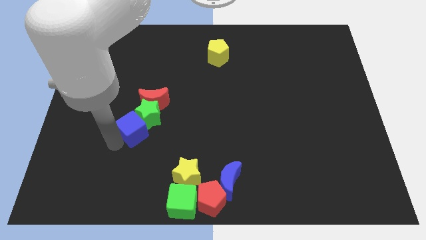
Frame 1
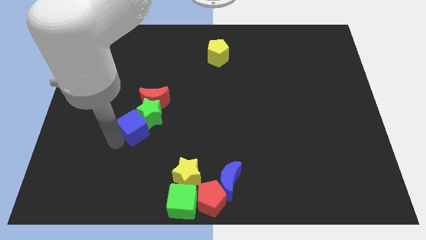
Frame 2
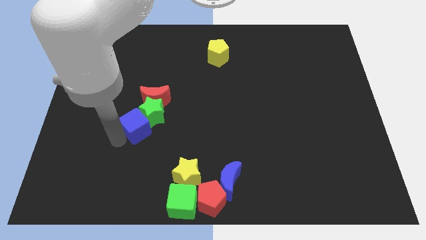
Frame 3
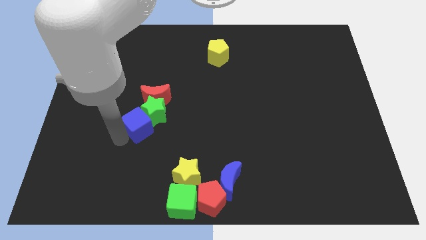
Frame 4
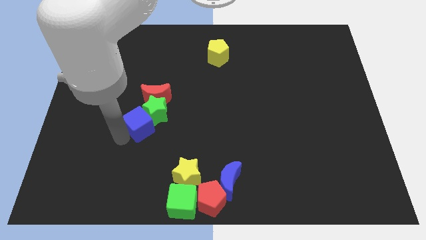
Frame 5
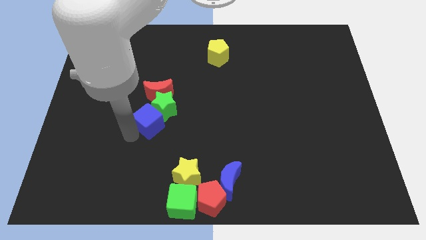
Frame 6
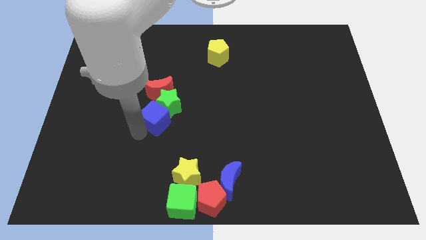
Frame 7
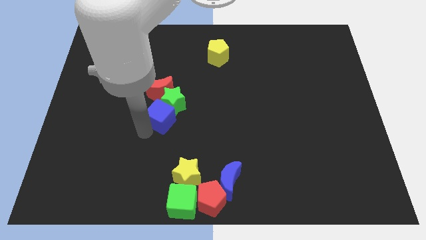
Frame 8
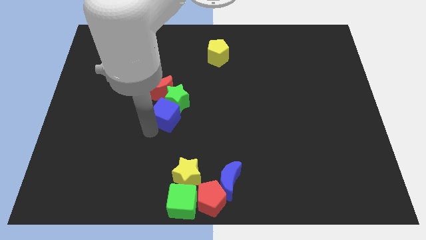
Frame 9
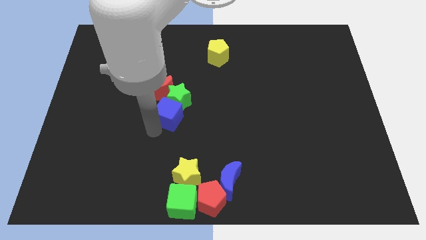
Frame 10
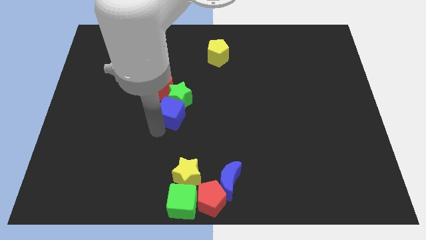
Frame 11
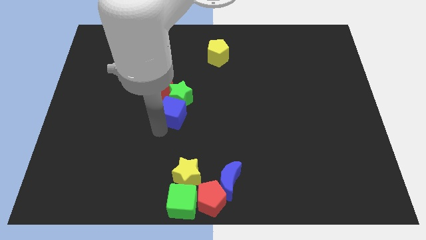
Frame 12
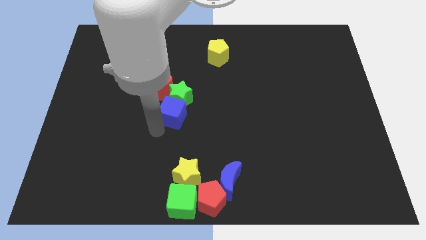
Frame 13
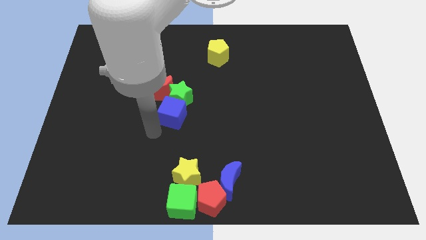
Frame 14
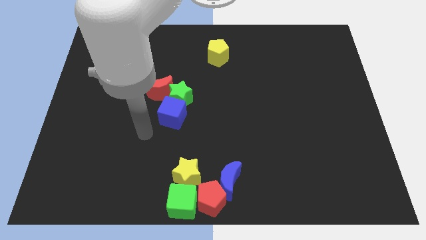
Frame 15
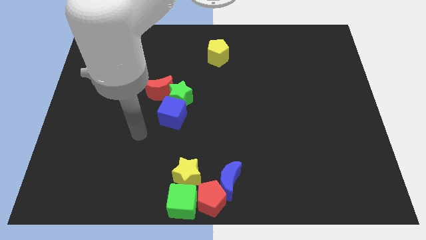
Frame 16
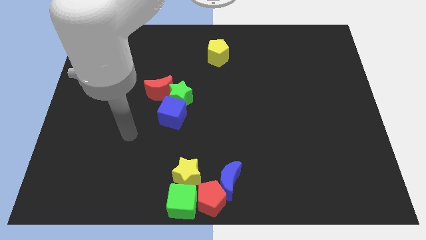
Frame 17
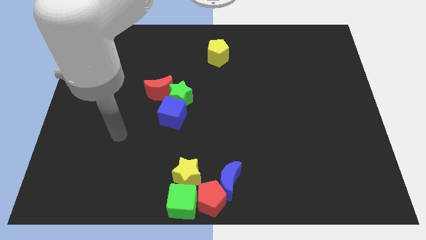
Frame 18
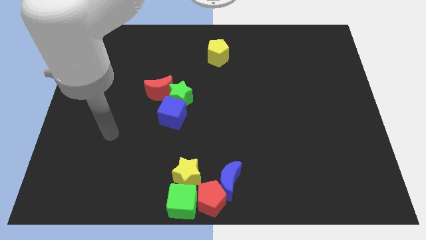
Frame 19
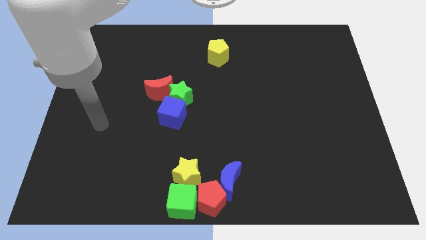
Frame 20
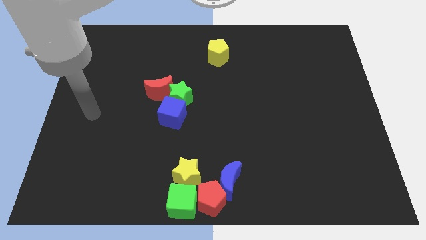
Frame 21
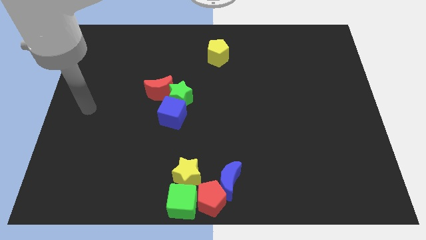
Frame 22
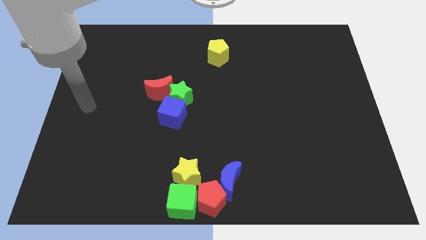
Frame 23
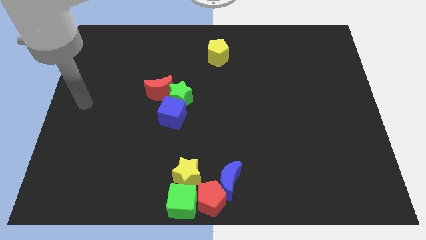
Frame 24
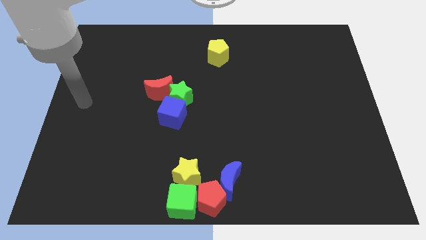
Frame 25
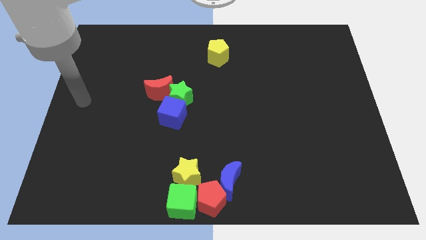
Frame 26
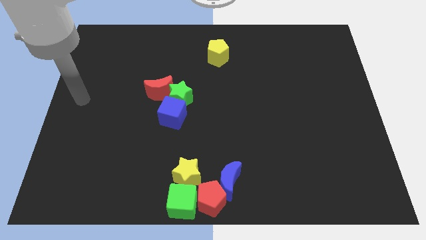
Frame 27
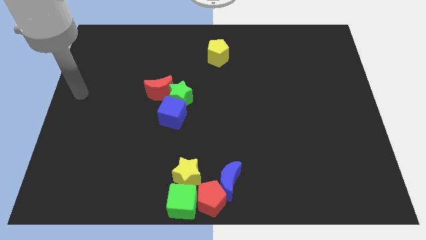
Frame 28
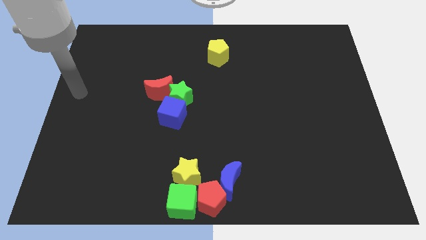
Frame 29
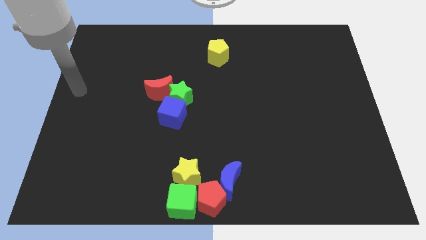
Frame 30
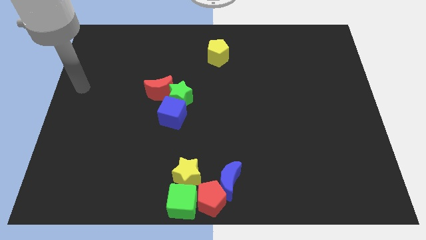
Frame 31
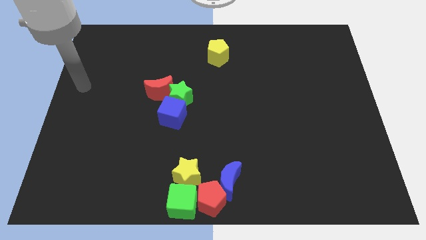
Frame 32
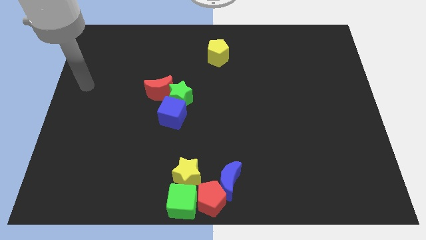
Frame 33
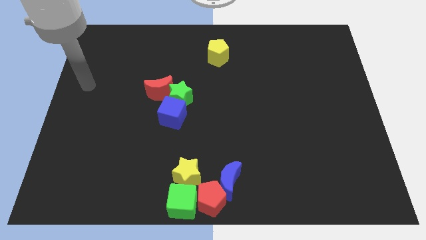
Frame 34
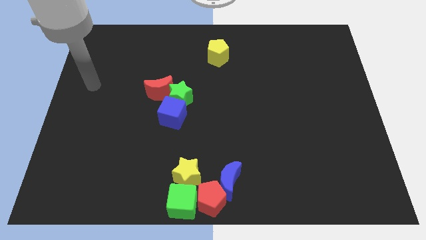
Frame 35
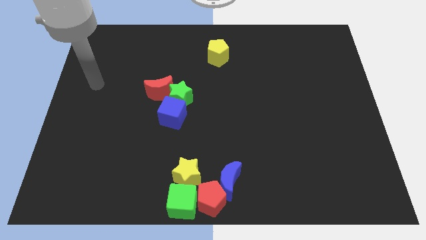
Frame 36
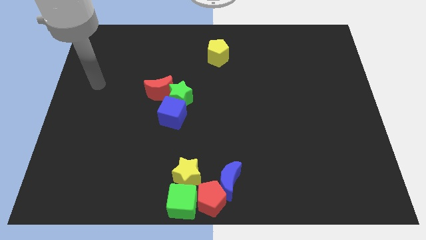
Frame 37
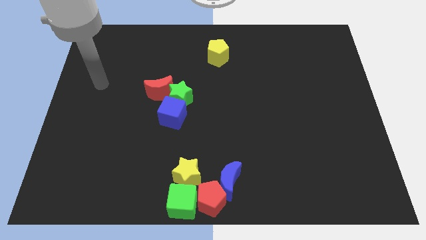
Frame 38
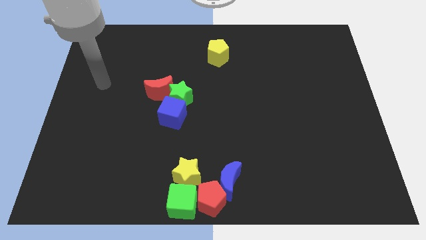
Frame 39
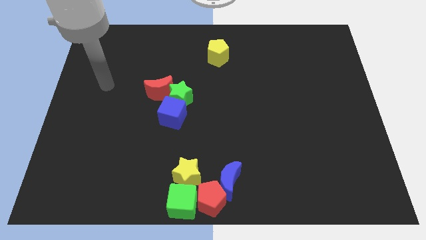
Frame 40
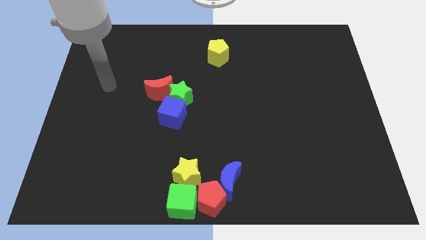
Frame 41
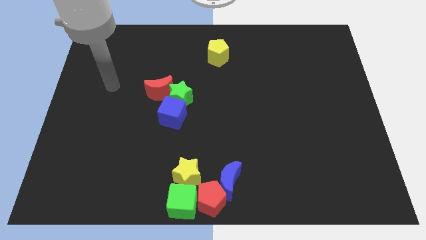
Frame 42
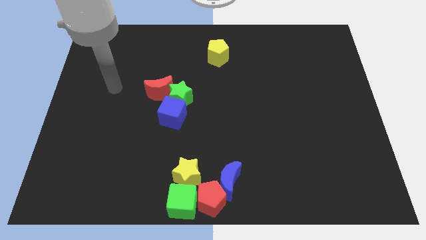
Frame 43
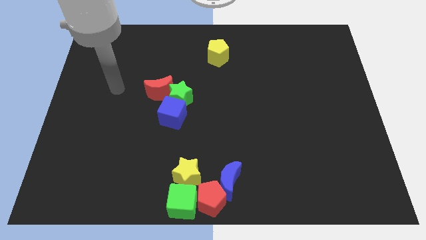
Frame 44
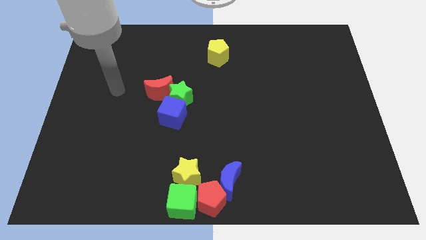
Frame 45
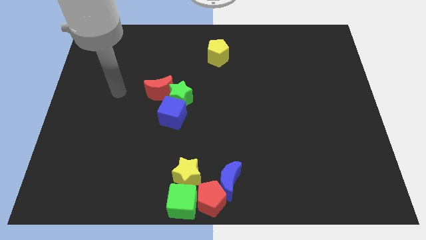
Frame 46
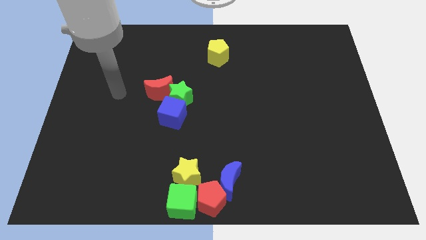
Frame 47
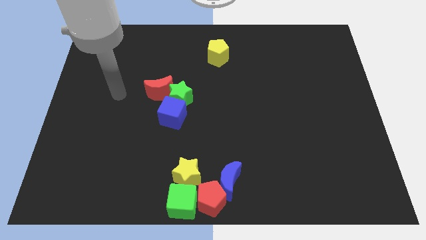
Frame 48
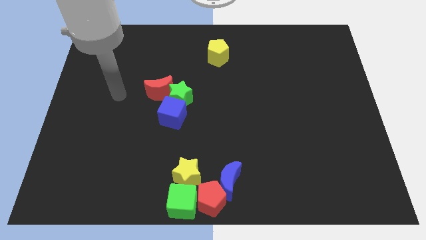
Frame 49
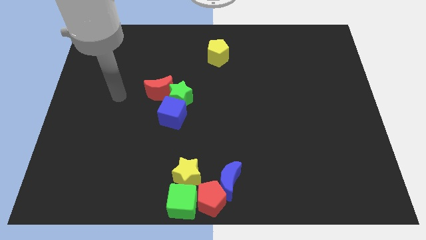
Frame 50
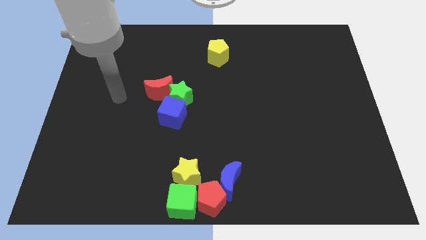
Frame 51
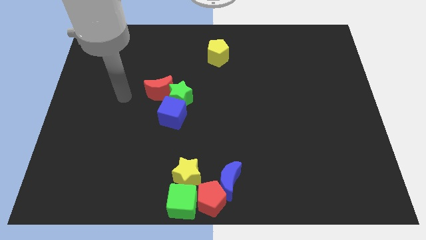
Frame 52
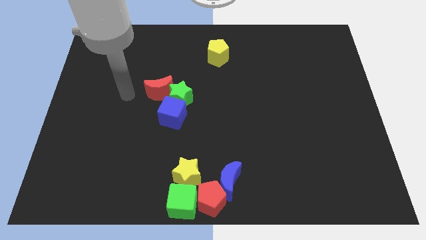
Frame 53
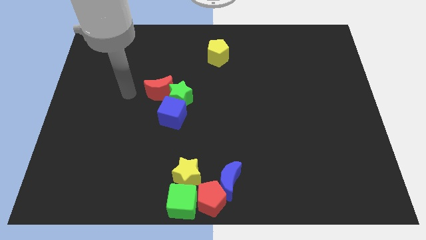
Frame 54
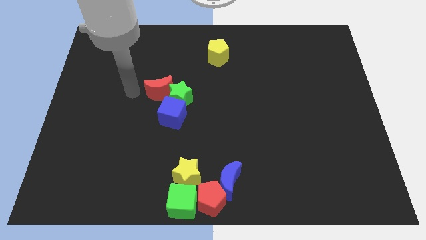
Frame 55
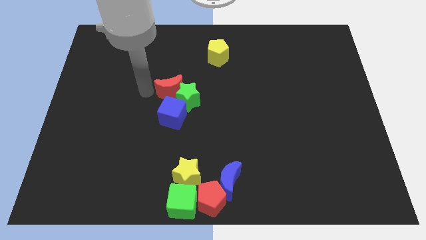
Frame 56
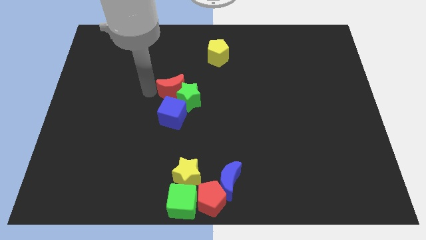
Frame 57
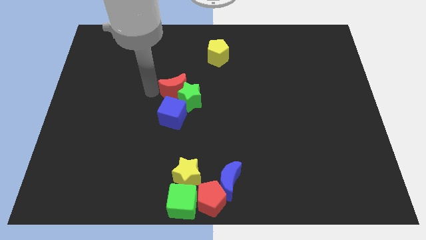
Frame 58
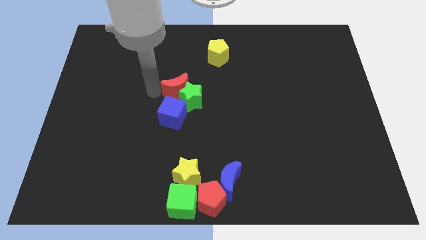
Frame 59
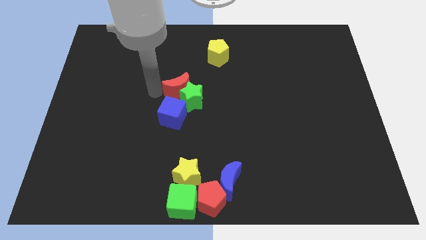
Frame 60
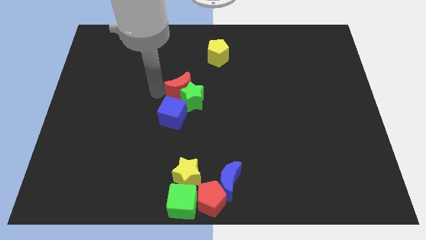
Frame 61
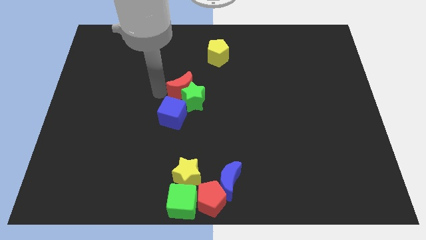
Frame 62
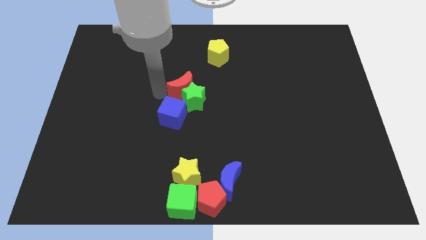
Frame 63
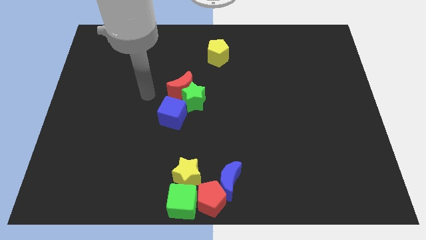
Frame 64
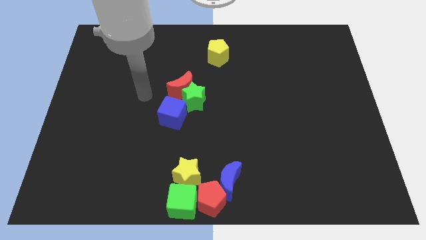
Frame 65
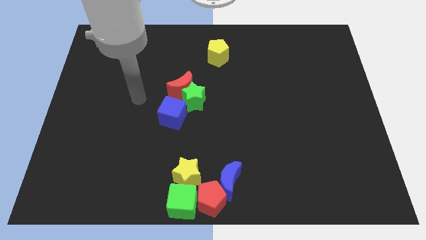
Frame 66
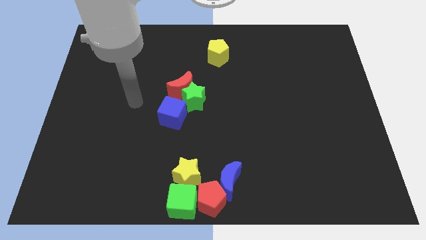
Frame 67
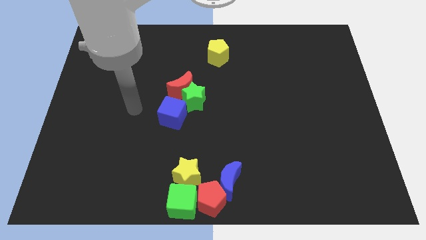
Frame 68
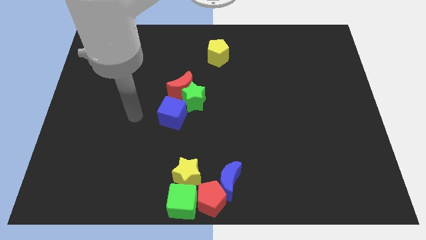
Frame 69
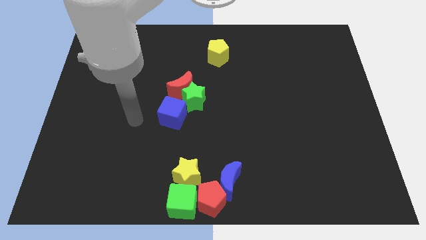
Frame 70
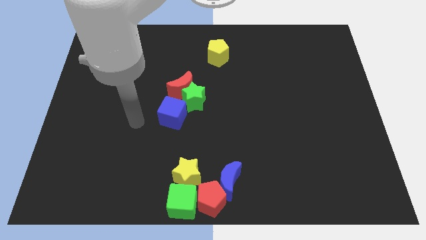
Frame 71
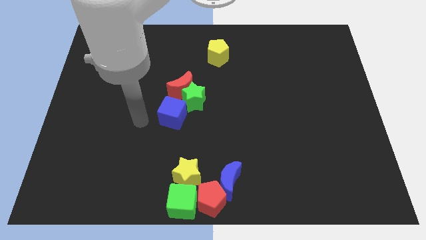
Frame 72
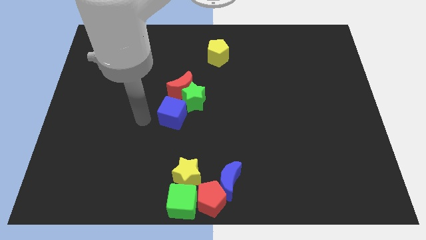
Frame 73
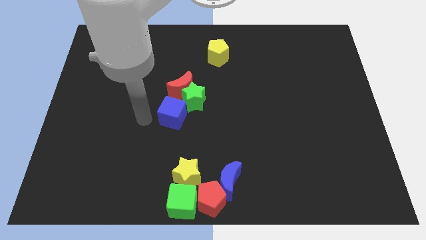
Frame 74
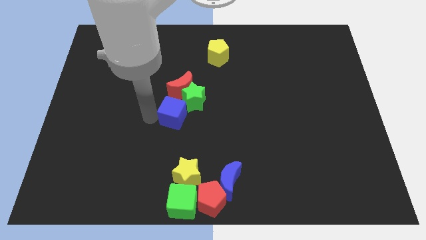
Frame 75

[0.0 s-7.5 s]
adjust the red crescent above the blue cube

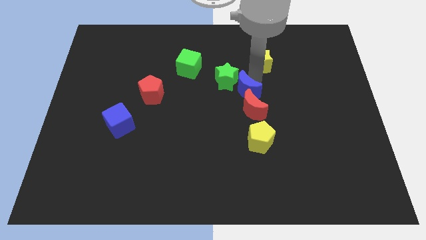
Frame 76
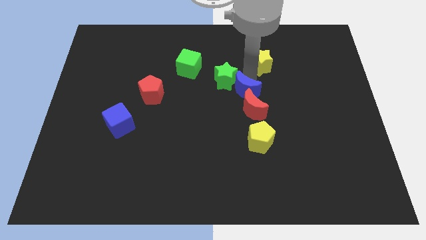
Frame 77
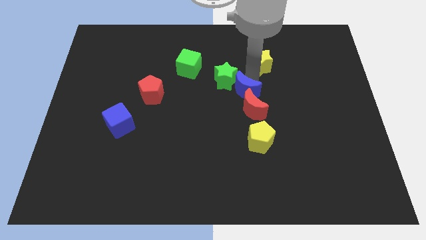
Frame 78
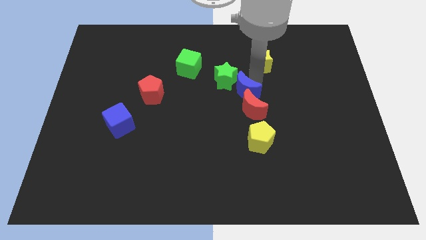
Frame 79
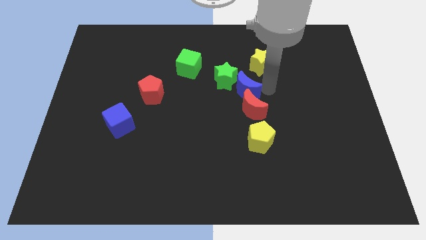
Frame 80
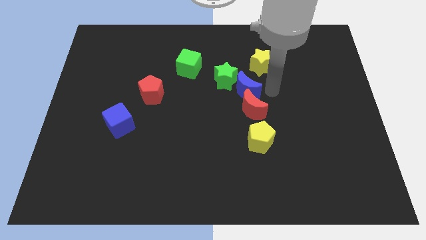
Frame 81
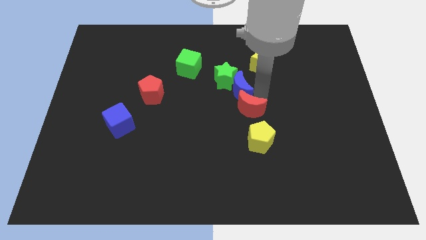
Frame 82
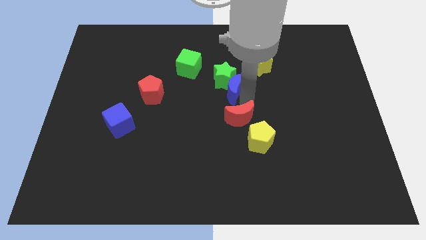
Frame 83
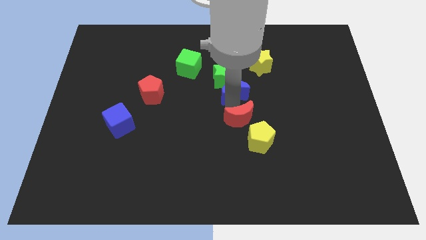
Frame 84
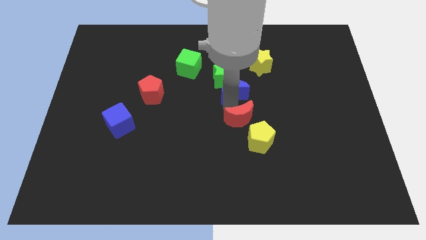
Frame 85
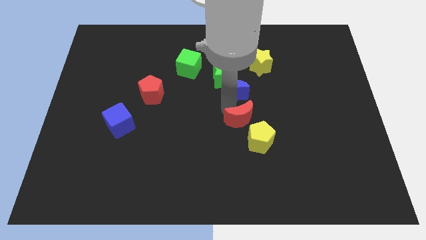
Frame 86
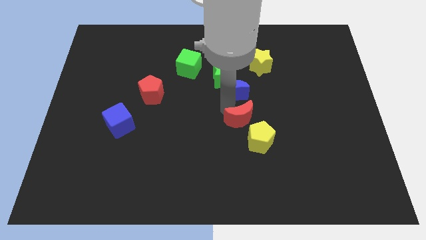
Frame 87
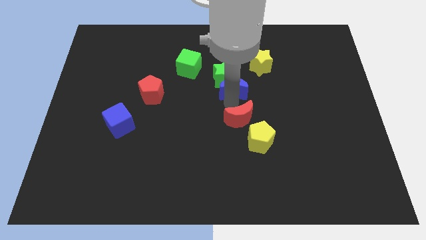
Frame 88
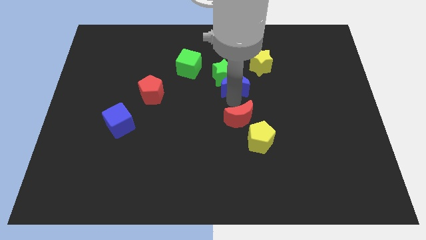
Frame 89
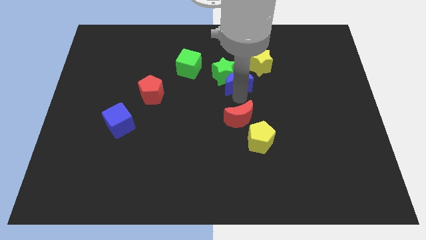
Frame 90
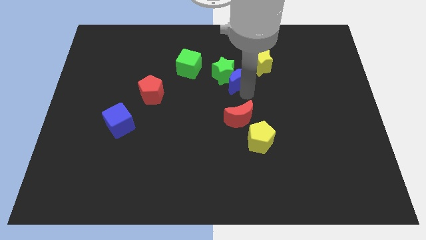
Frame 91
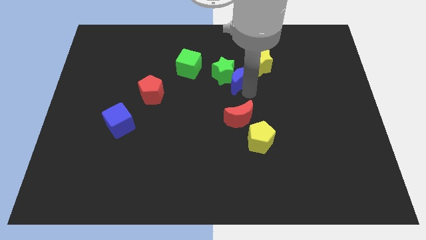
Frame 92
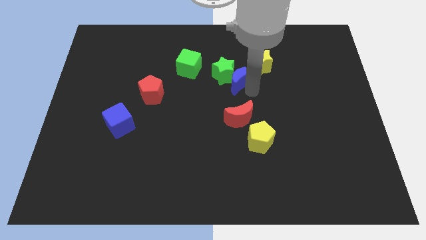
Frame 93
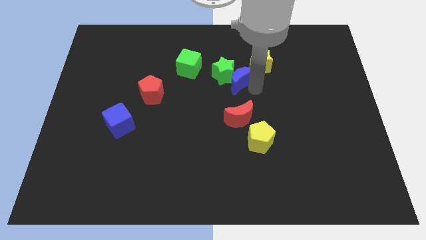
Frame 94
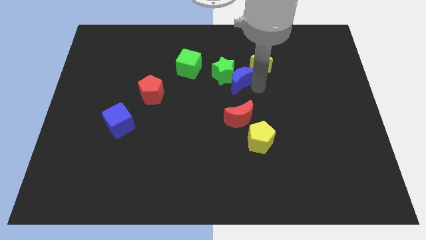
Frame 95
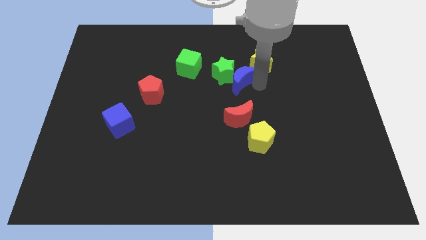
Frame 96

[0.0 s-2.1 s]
separate red crescent and the blue moon
